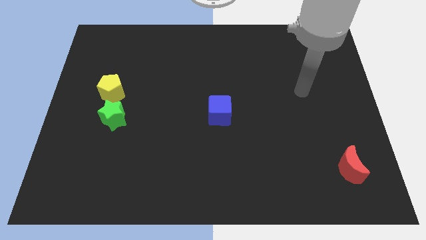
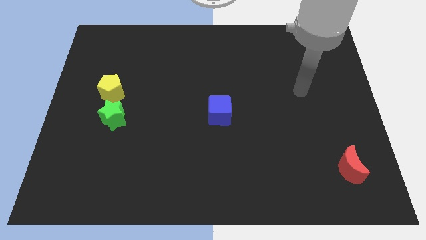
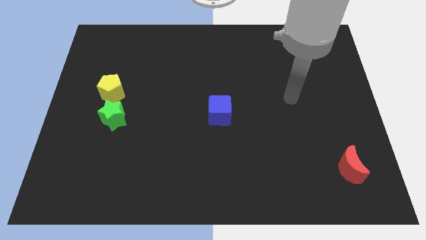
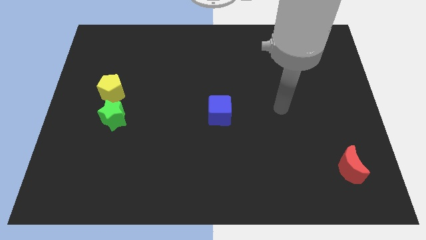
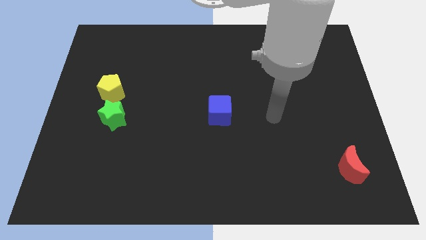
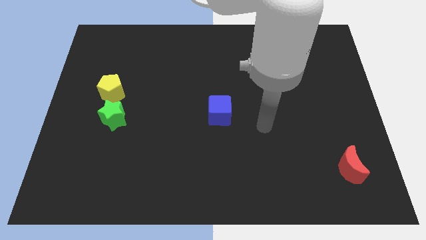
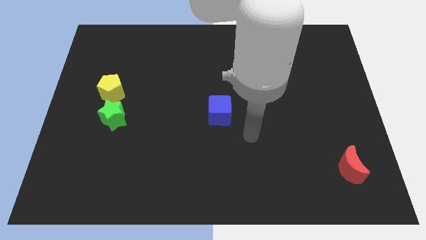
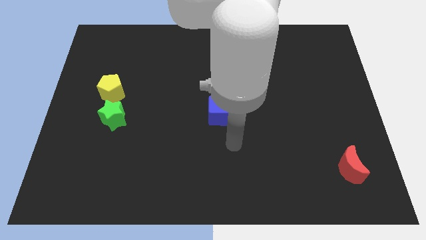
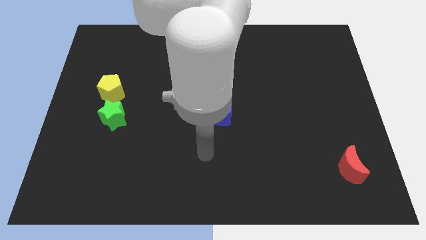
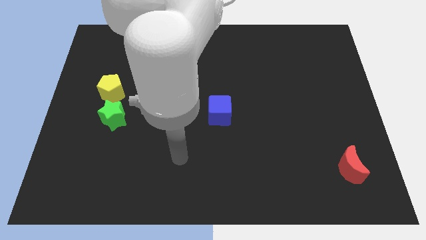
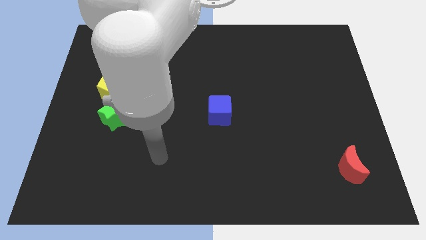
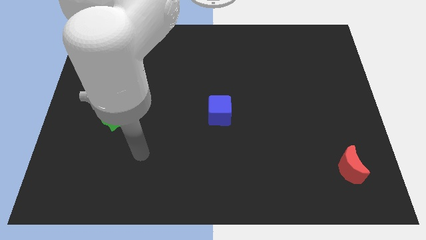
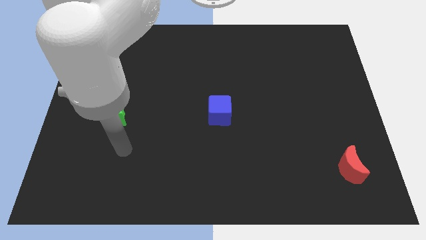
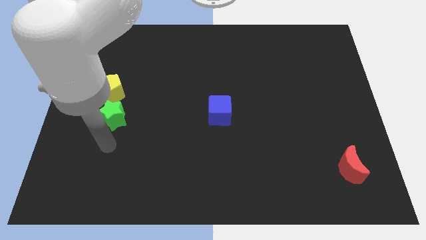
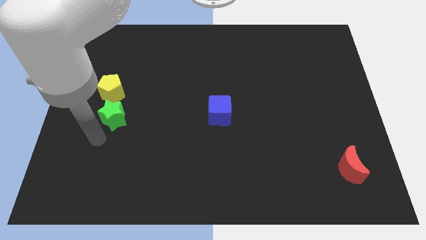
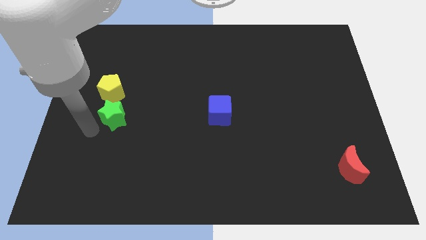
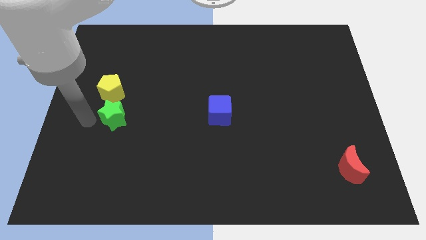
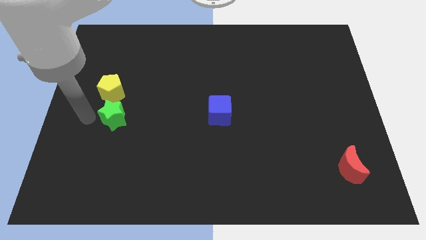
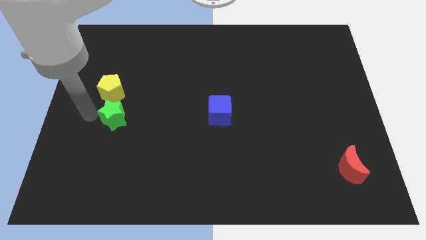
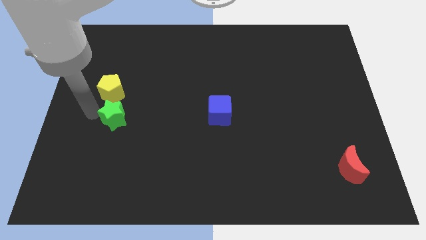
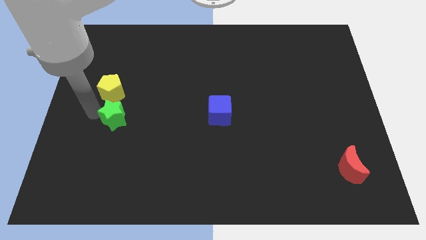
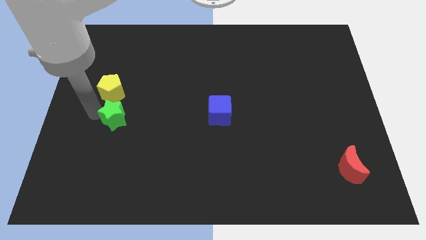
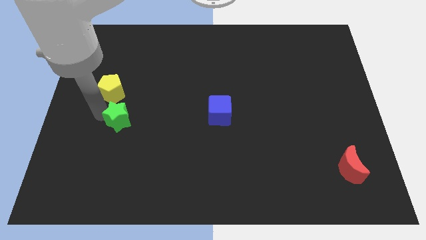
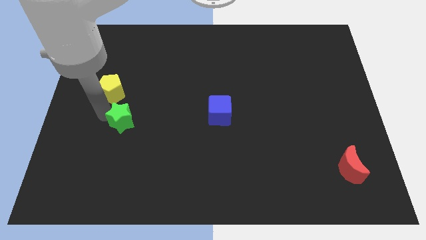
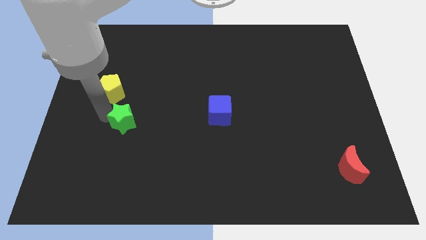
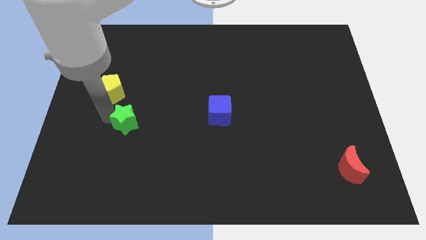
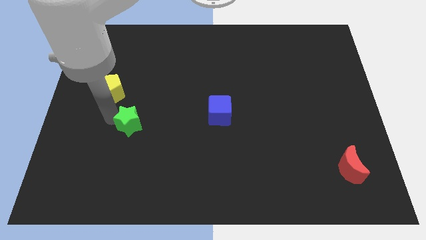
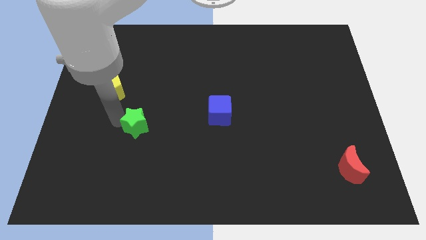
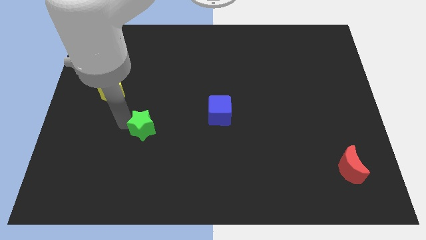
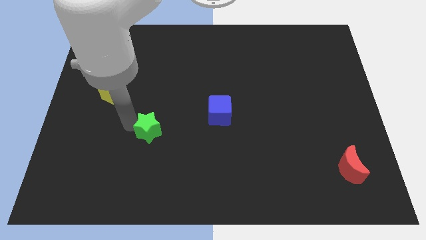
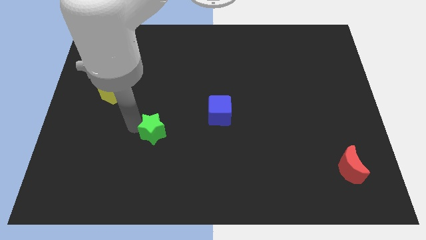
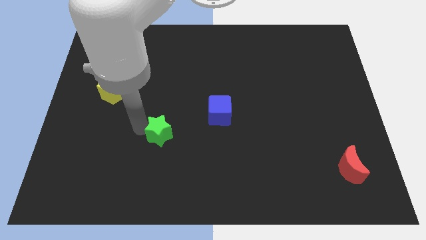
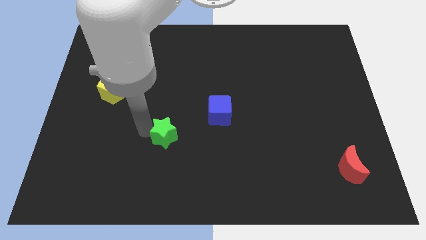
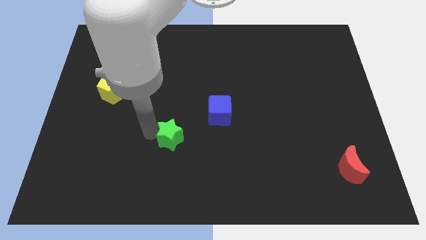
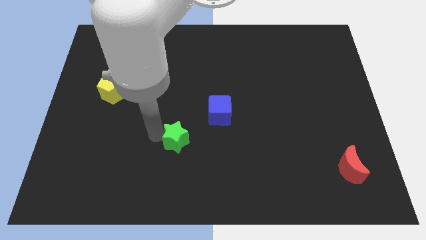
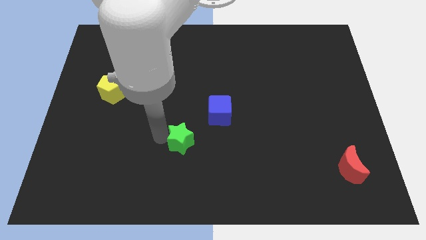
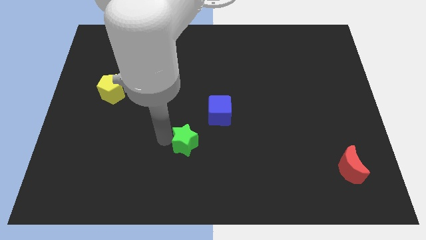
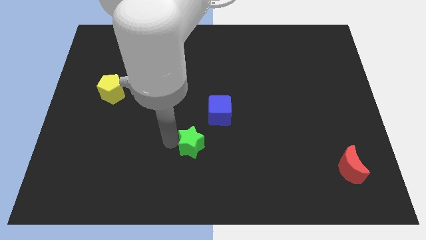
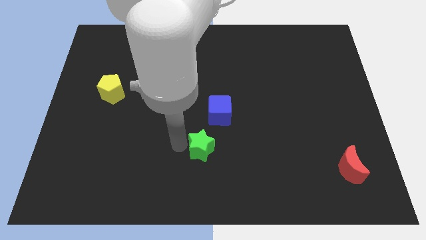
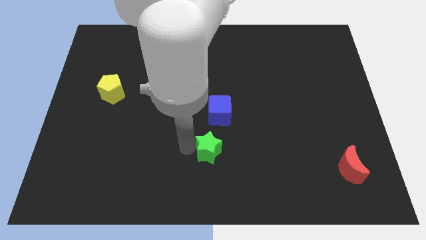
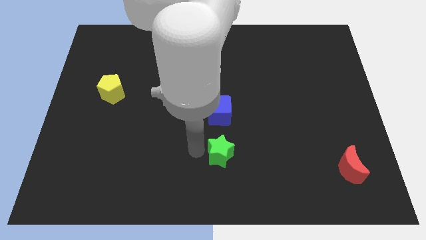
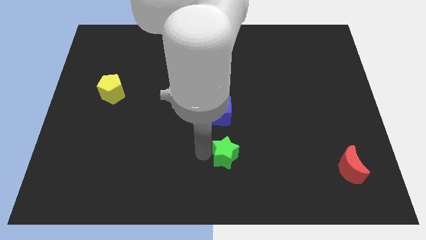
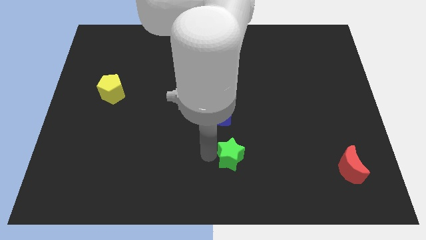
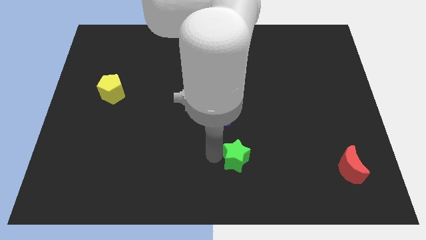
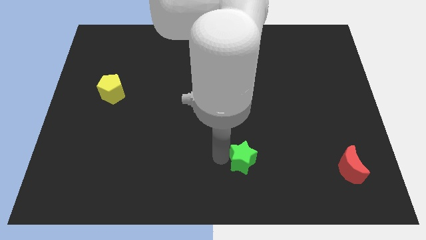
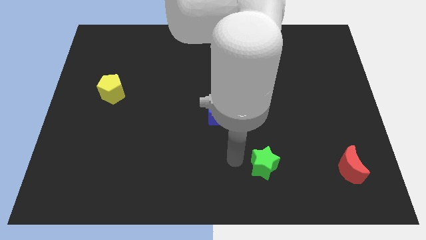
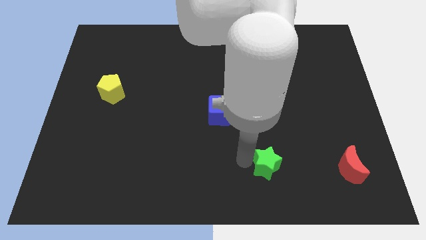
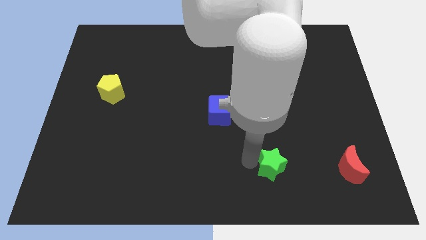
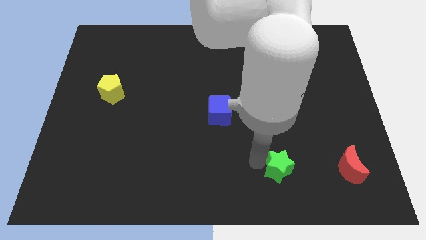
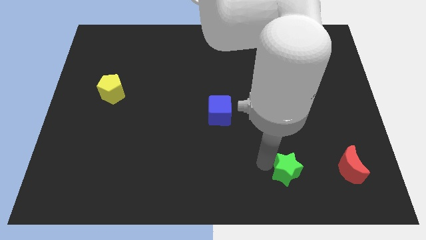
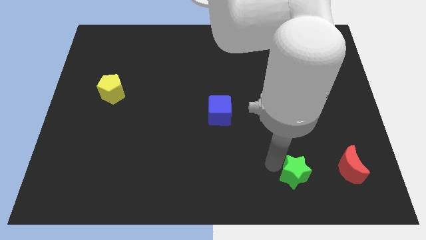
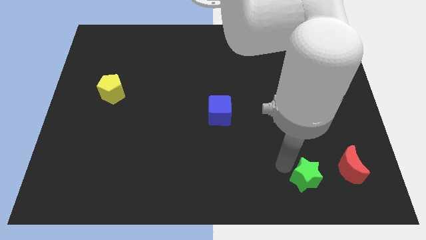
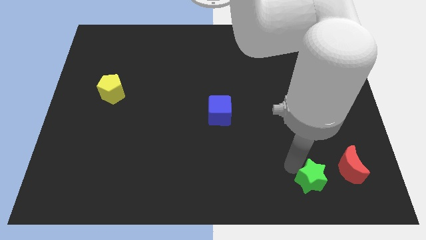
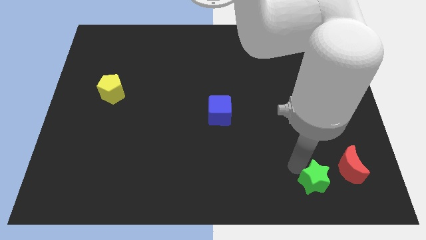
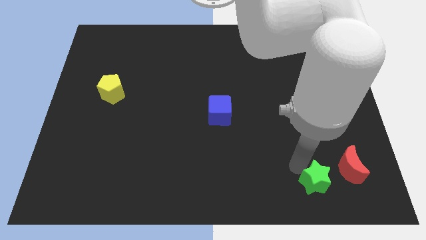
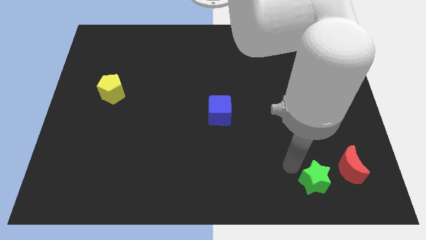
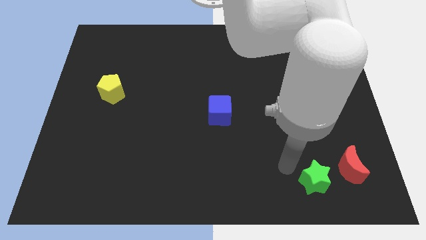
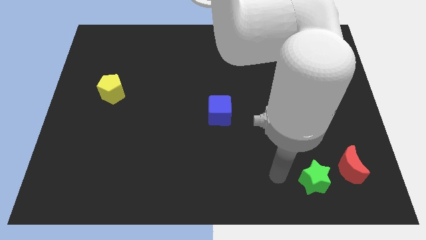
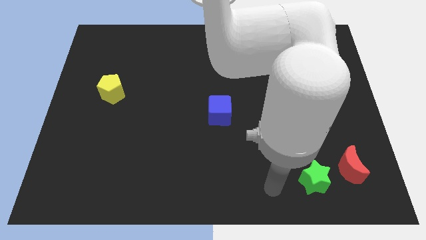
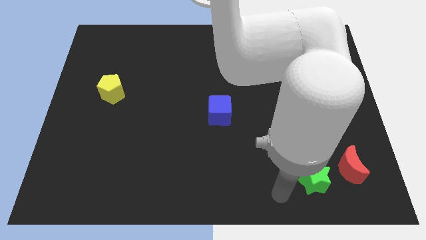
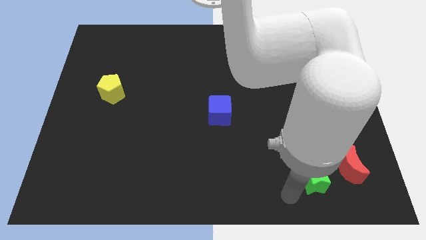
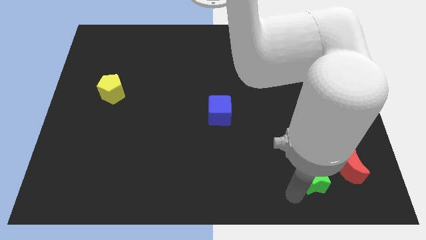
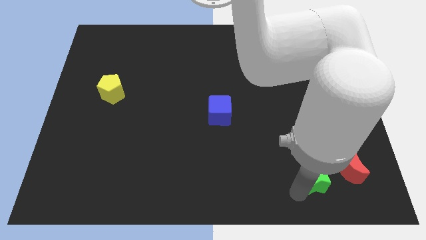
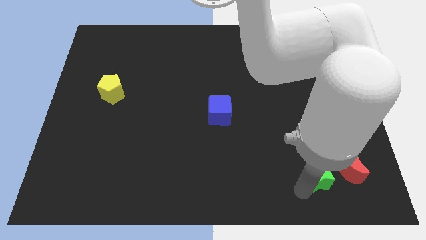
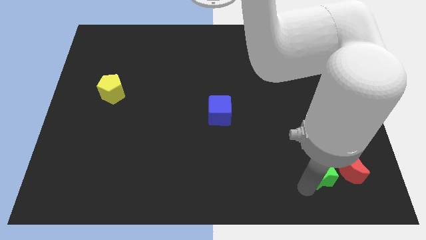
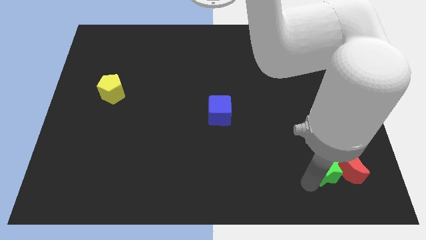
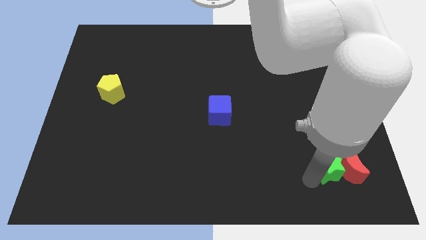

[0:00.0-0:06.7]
slide the green star towards the red moon

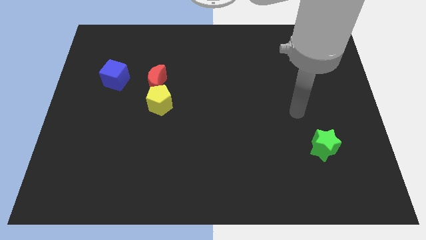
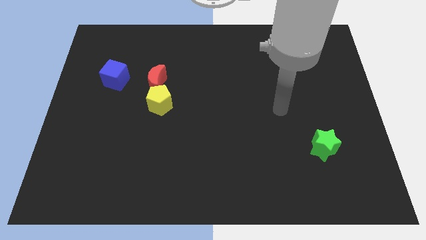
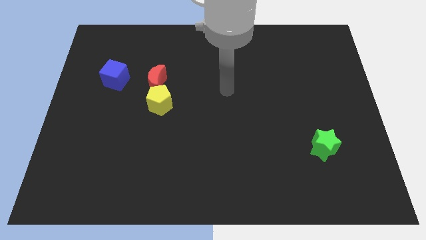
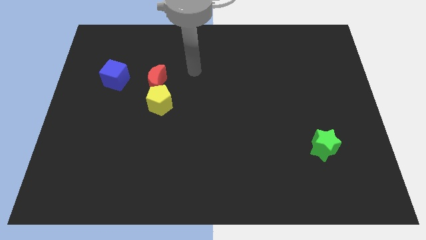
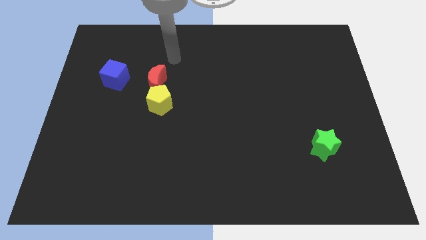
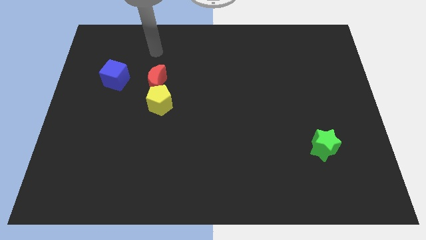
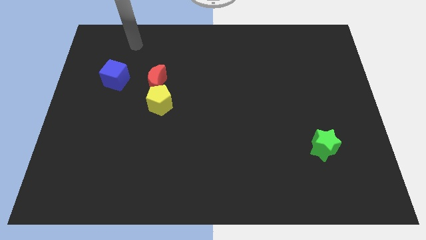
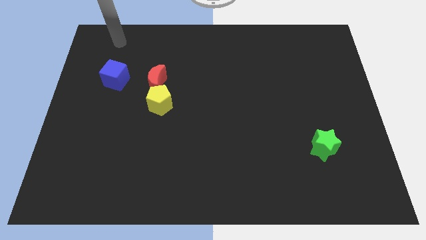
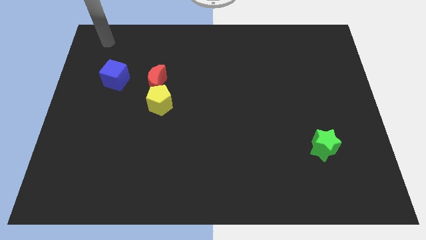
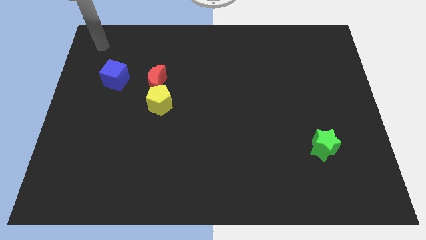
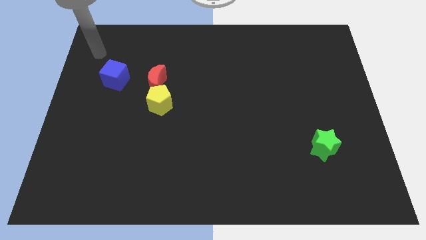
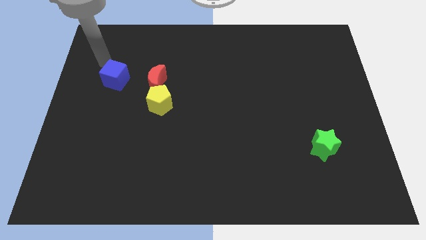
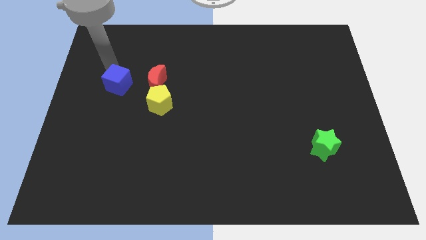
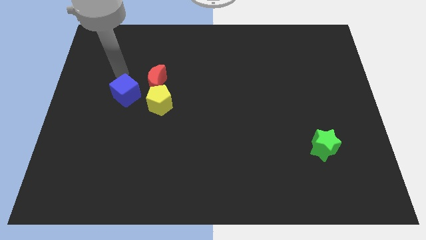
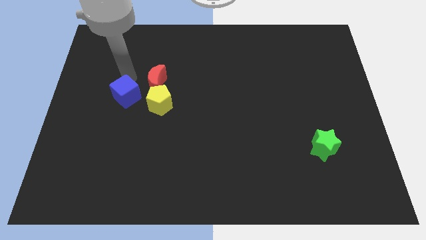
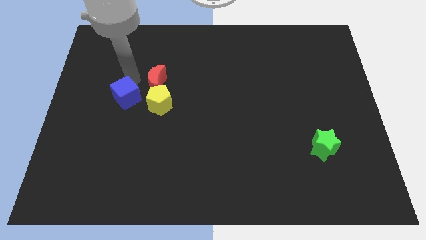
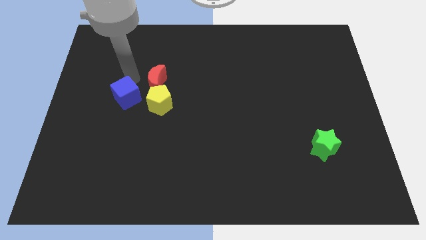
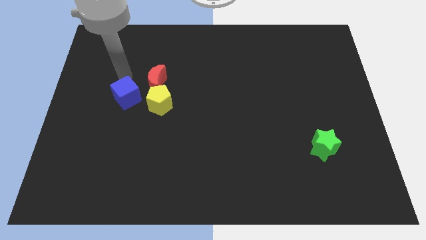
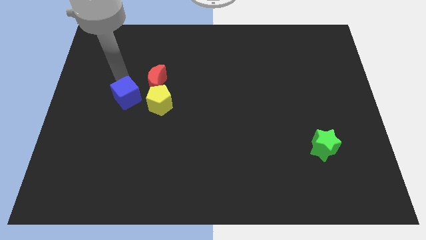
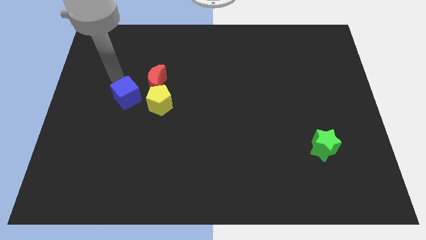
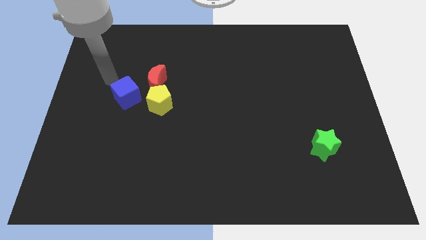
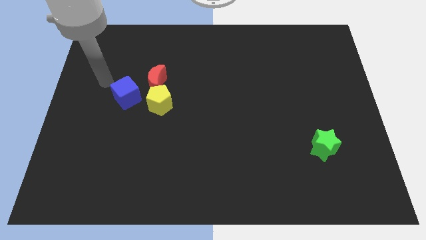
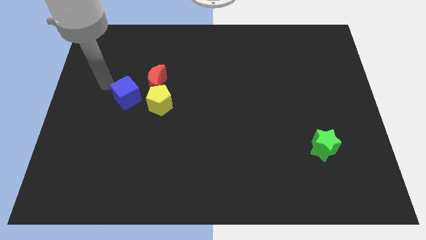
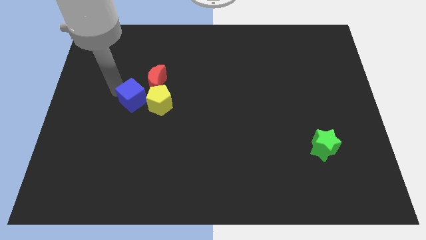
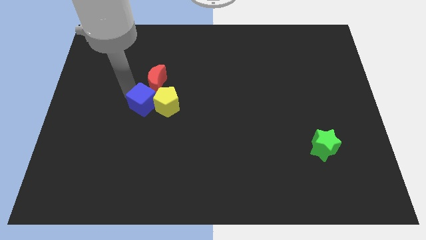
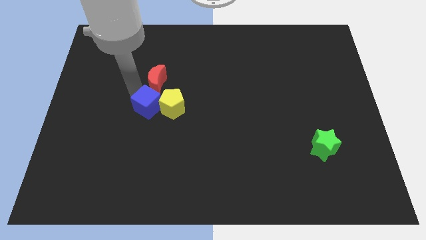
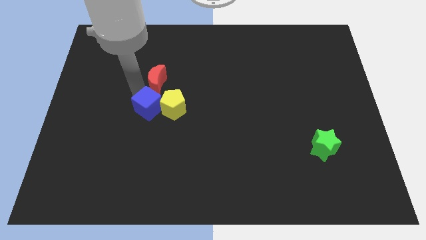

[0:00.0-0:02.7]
slide the cube towards the yellow pentagon
